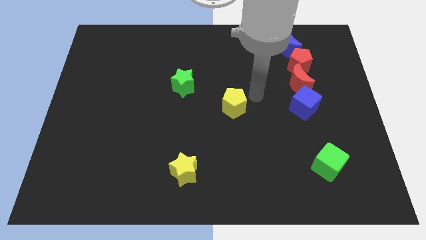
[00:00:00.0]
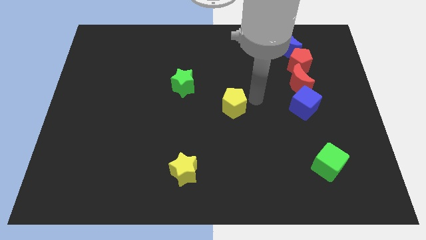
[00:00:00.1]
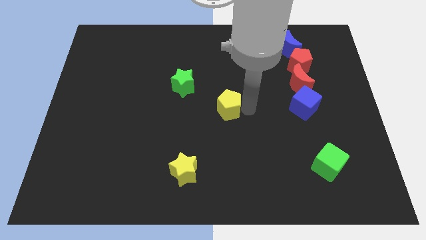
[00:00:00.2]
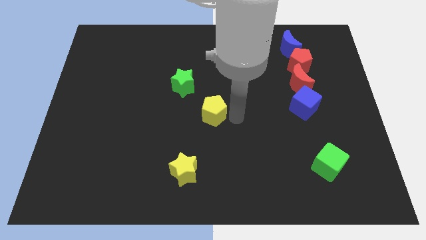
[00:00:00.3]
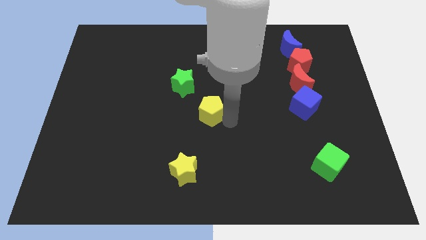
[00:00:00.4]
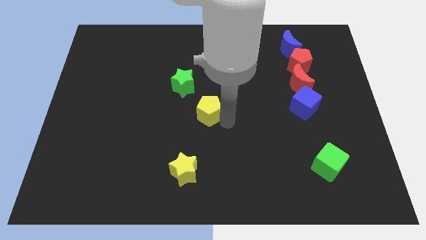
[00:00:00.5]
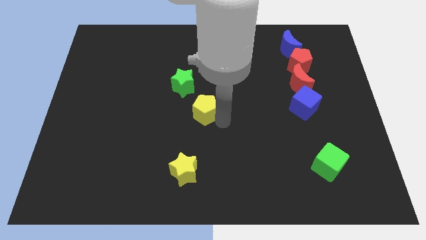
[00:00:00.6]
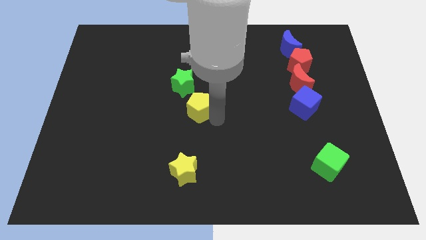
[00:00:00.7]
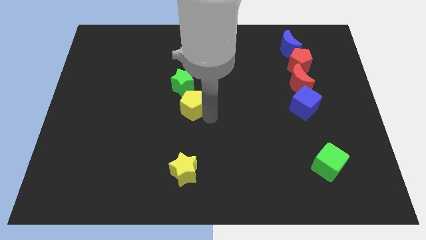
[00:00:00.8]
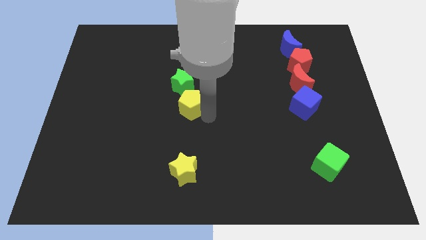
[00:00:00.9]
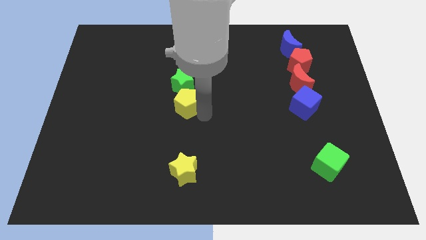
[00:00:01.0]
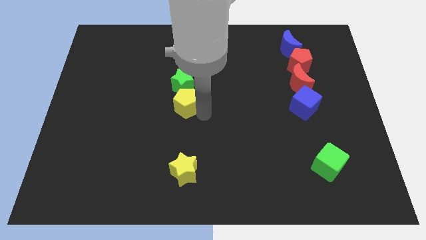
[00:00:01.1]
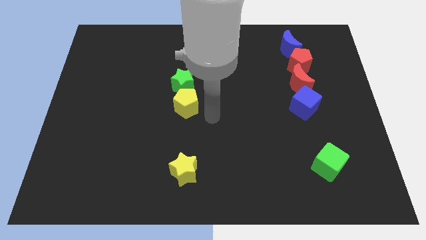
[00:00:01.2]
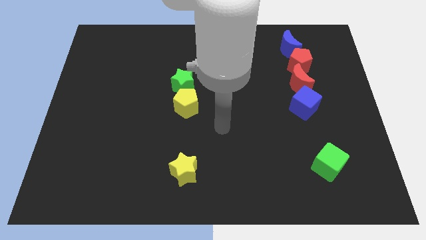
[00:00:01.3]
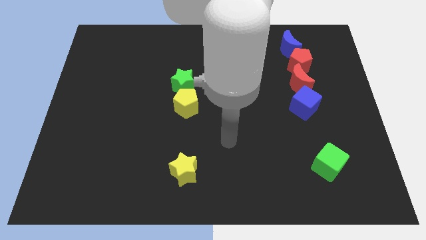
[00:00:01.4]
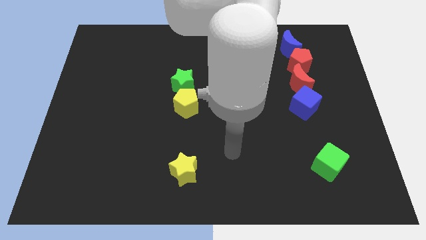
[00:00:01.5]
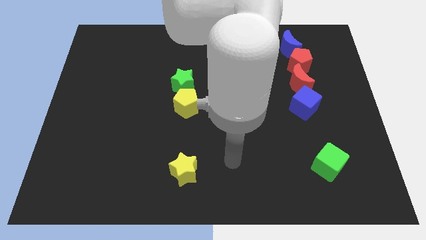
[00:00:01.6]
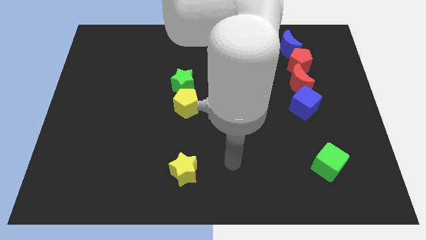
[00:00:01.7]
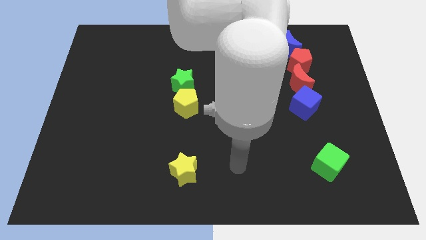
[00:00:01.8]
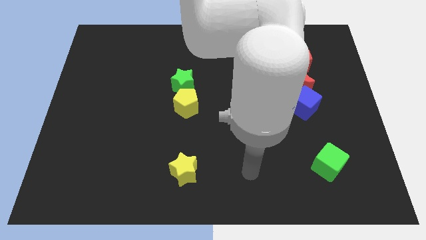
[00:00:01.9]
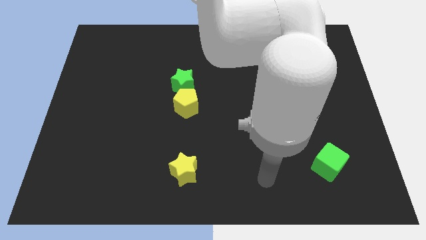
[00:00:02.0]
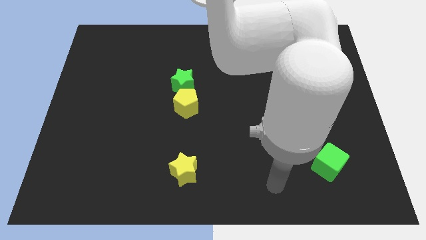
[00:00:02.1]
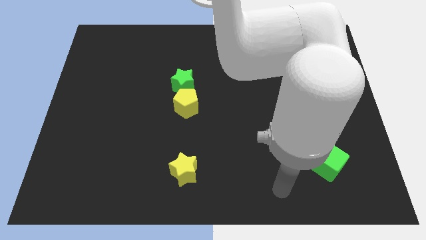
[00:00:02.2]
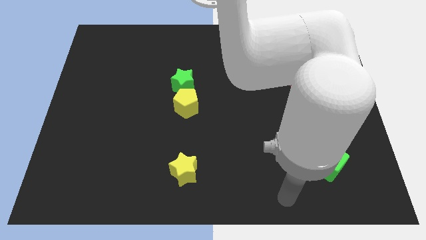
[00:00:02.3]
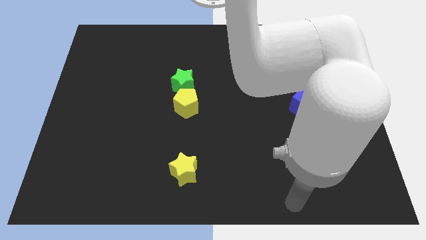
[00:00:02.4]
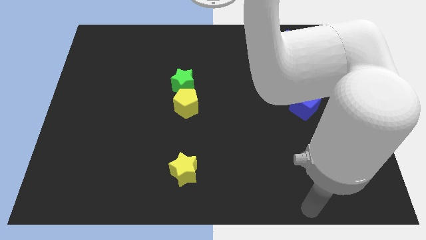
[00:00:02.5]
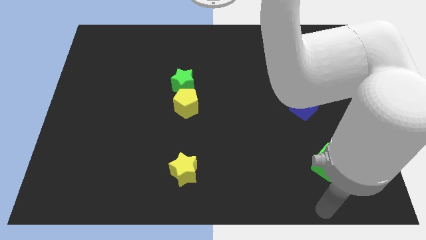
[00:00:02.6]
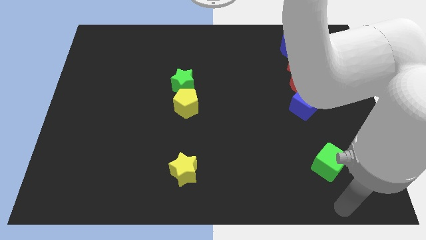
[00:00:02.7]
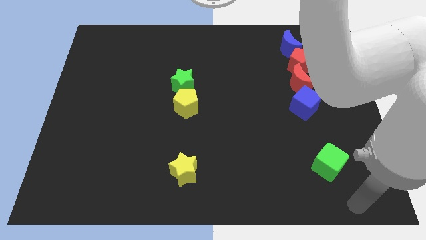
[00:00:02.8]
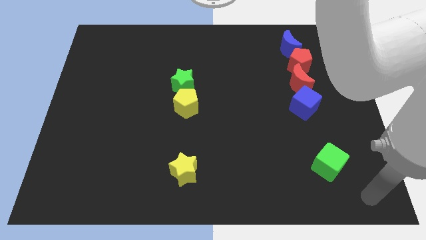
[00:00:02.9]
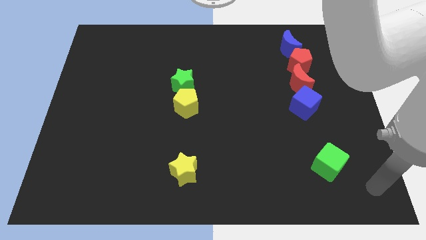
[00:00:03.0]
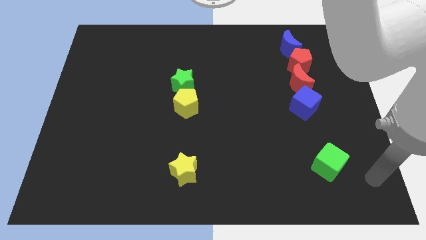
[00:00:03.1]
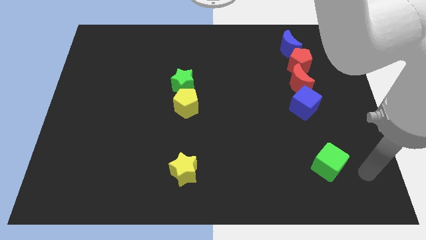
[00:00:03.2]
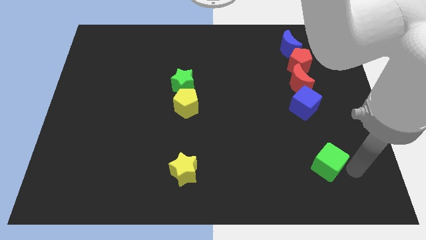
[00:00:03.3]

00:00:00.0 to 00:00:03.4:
push the yellow pentagon towards the bottom of the green star

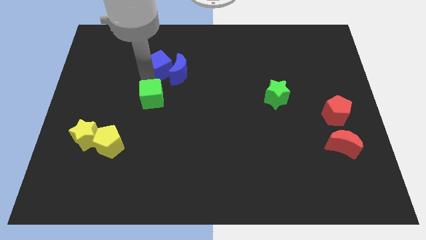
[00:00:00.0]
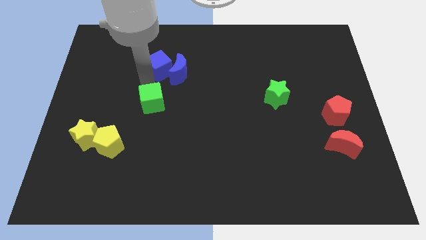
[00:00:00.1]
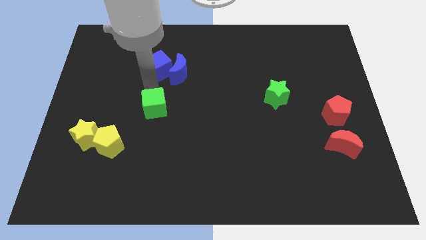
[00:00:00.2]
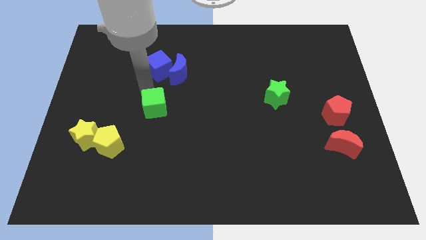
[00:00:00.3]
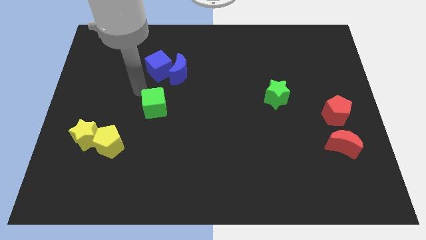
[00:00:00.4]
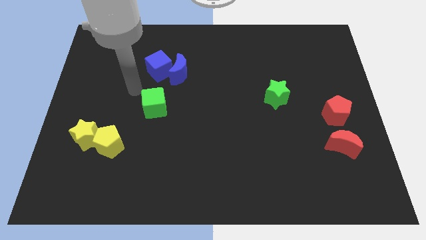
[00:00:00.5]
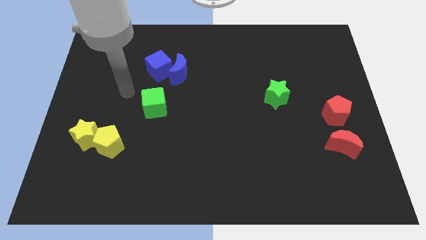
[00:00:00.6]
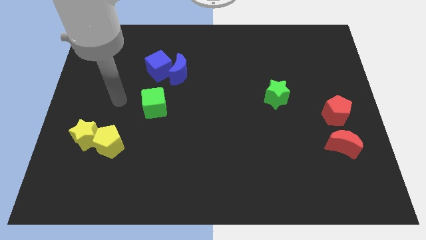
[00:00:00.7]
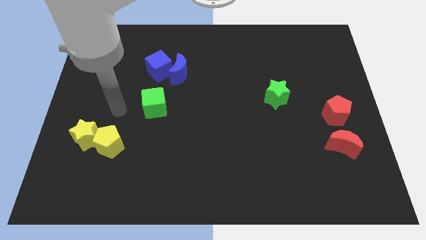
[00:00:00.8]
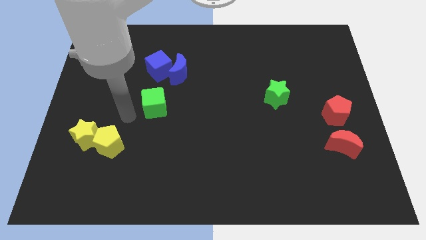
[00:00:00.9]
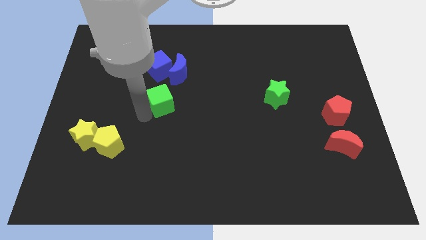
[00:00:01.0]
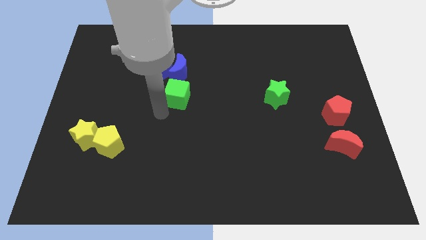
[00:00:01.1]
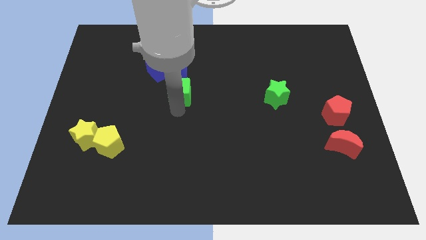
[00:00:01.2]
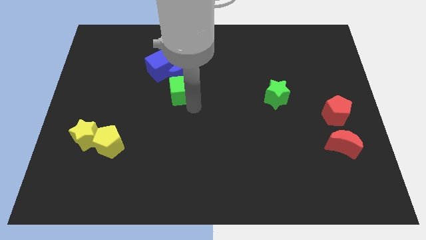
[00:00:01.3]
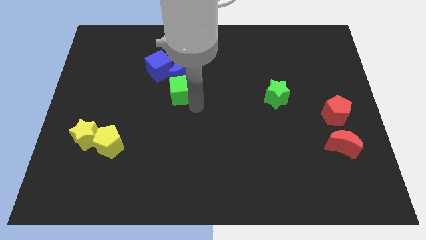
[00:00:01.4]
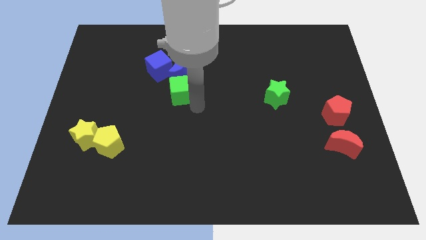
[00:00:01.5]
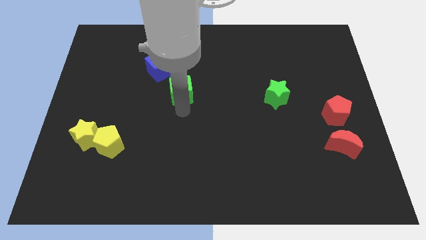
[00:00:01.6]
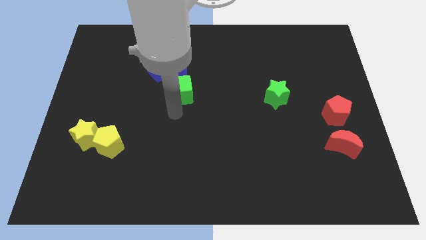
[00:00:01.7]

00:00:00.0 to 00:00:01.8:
place the green cube below blue moon

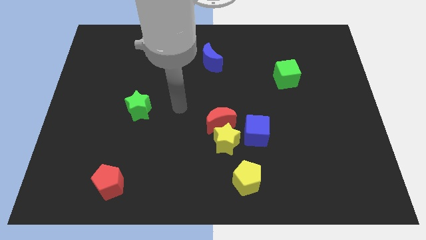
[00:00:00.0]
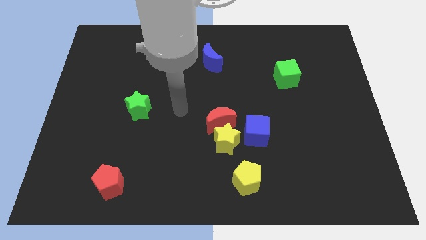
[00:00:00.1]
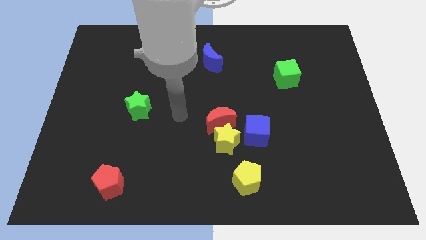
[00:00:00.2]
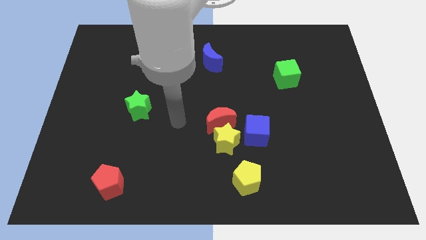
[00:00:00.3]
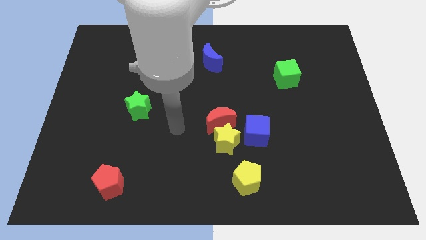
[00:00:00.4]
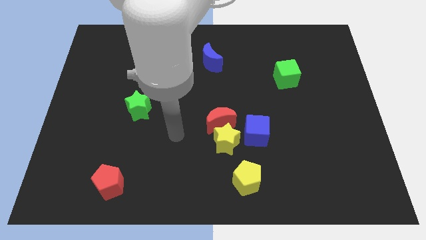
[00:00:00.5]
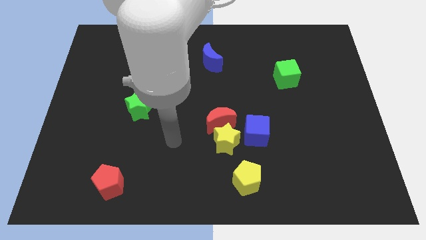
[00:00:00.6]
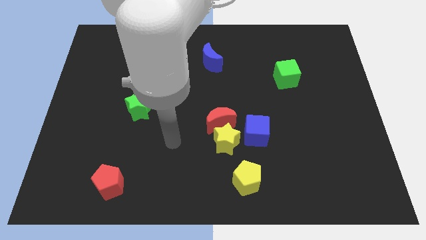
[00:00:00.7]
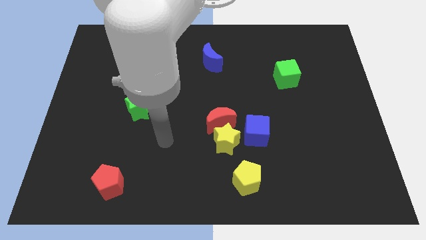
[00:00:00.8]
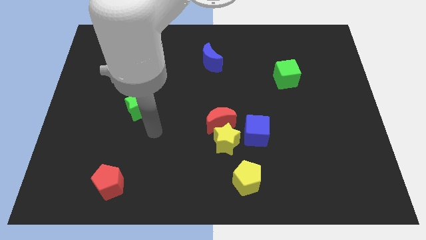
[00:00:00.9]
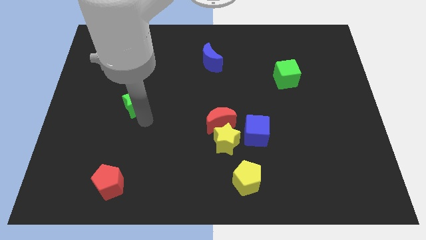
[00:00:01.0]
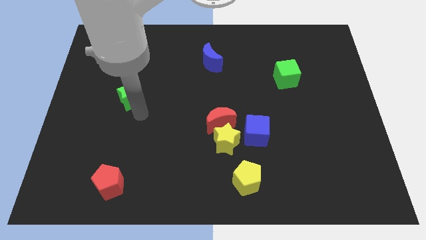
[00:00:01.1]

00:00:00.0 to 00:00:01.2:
move the green star to the top of the board

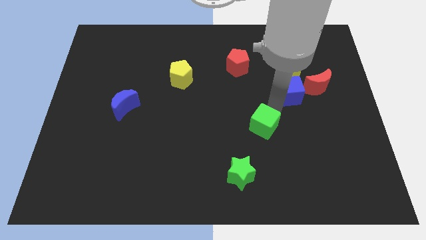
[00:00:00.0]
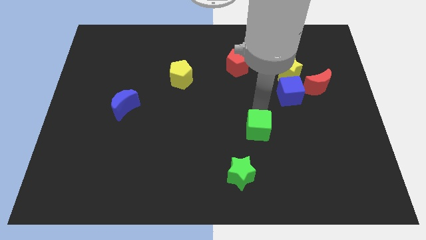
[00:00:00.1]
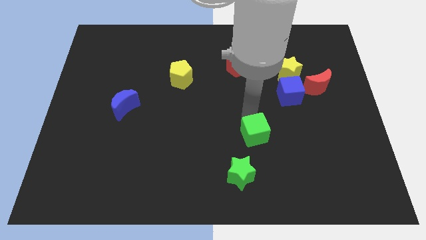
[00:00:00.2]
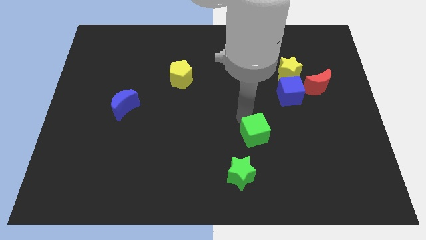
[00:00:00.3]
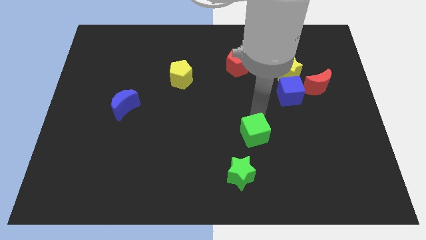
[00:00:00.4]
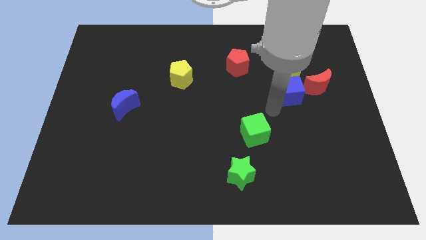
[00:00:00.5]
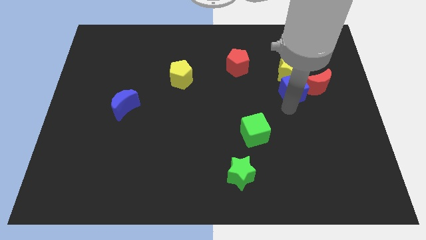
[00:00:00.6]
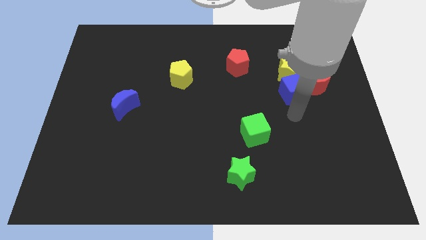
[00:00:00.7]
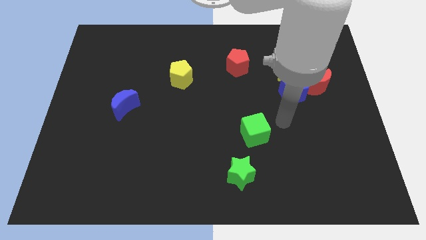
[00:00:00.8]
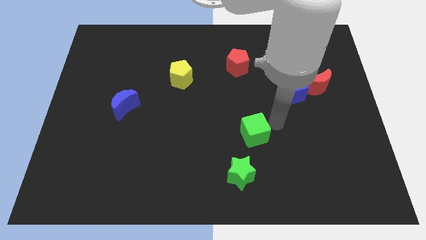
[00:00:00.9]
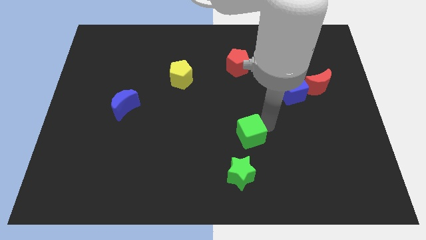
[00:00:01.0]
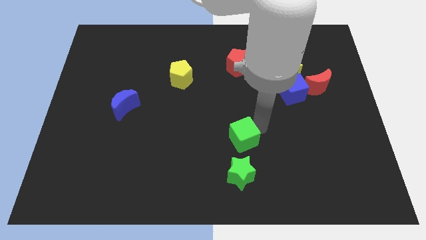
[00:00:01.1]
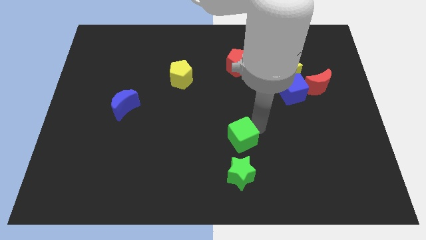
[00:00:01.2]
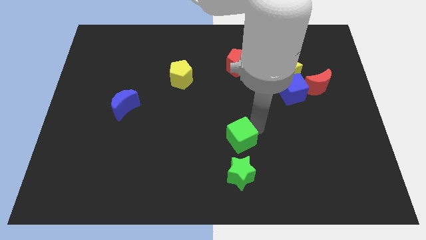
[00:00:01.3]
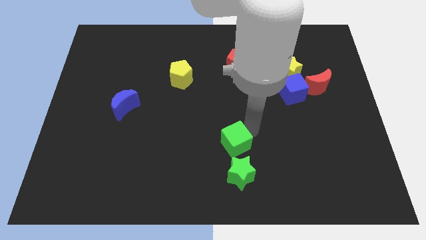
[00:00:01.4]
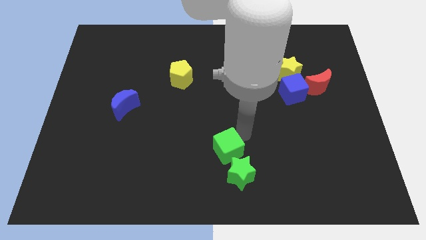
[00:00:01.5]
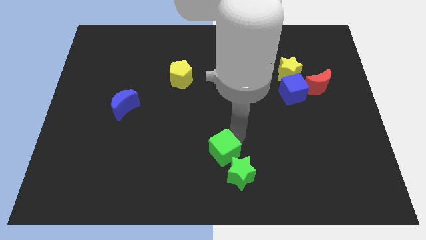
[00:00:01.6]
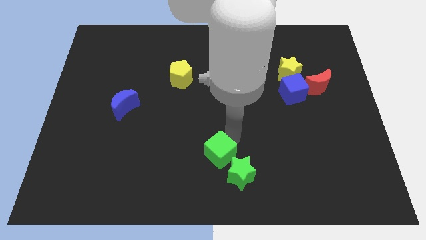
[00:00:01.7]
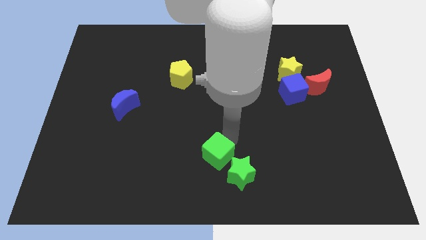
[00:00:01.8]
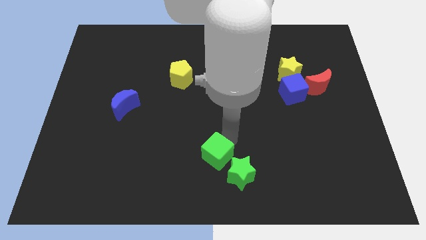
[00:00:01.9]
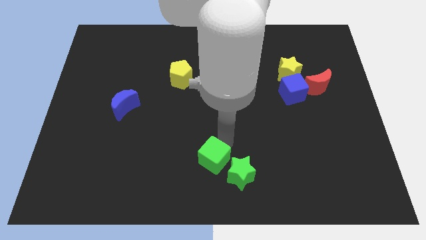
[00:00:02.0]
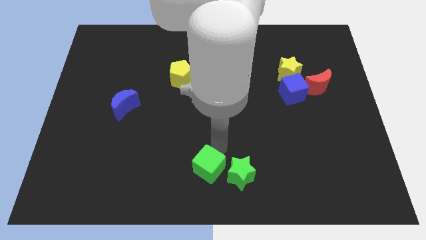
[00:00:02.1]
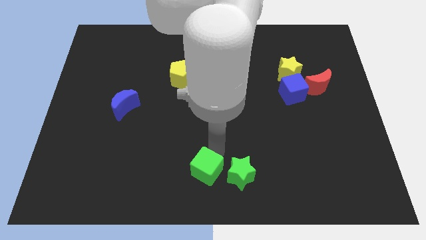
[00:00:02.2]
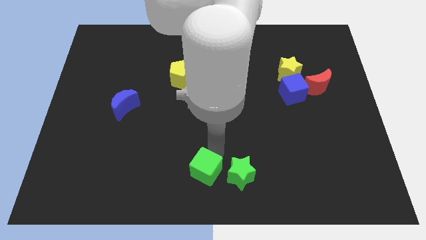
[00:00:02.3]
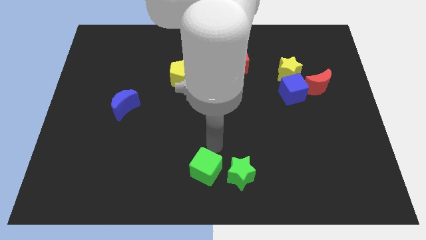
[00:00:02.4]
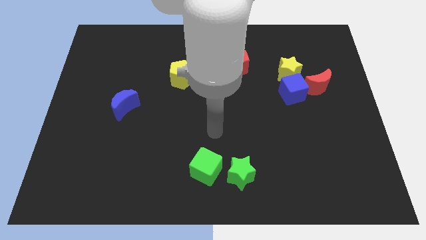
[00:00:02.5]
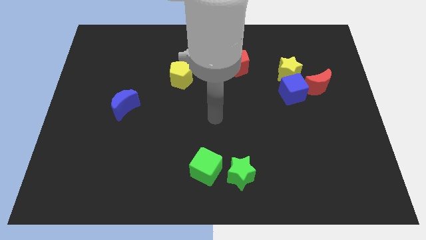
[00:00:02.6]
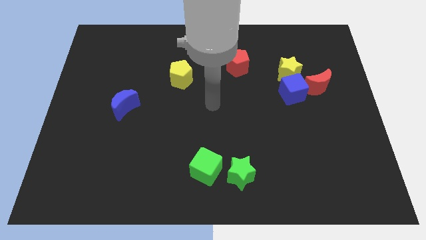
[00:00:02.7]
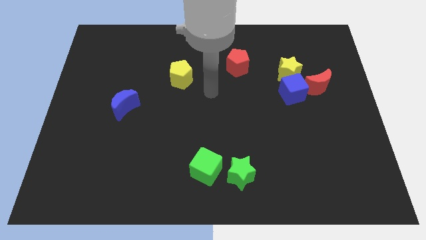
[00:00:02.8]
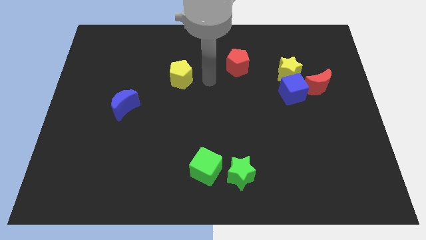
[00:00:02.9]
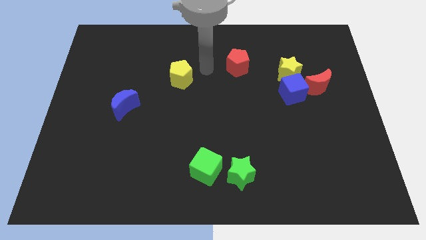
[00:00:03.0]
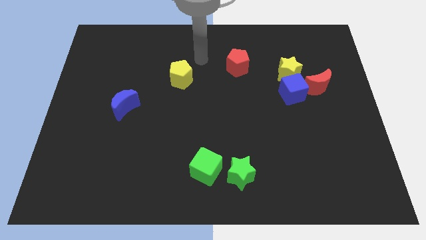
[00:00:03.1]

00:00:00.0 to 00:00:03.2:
place the green cube left to the green star
